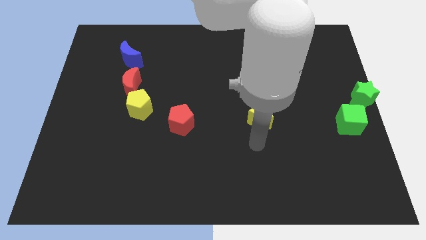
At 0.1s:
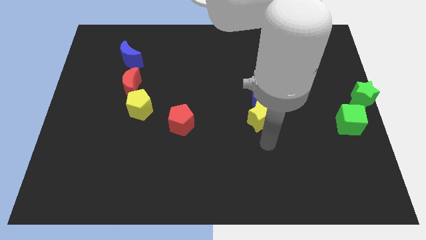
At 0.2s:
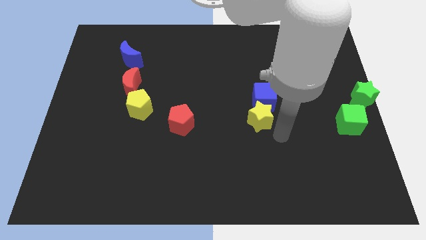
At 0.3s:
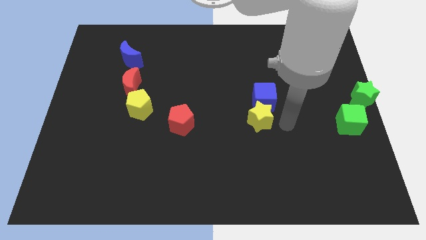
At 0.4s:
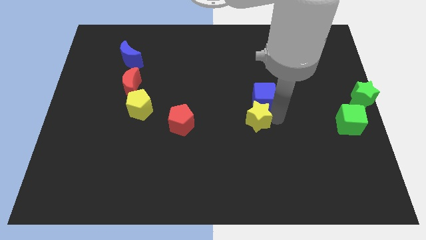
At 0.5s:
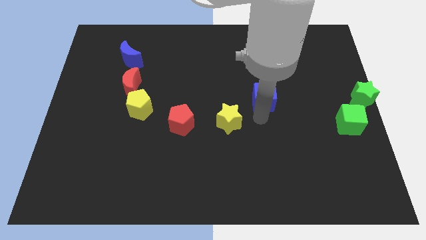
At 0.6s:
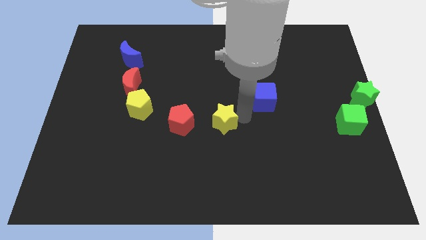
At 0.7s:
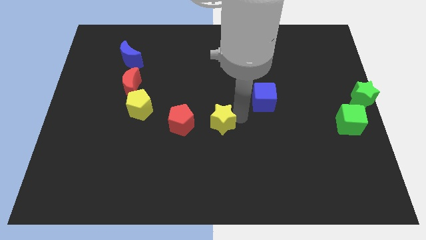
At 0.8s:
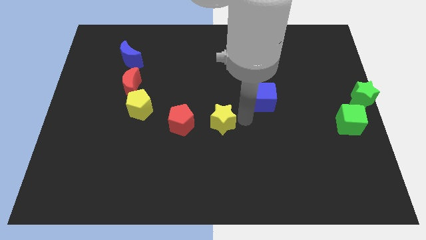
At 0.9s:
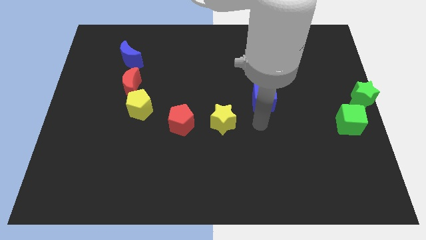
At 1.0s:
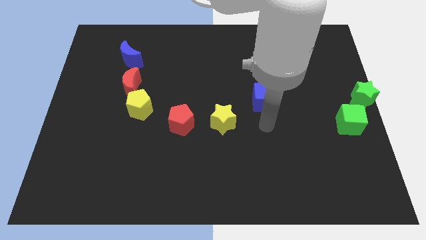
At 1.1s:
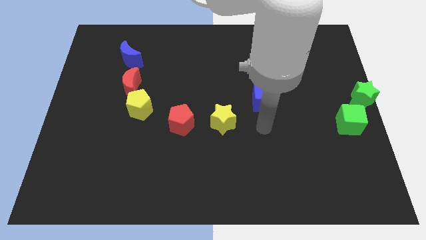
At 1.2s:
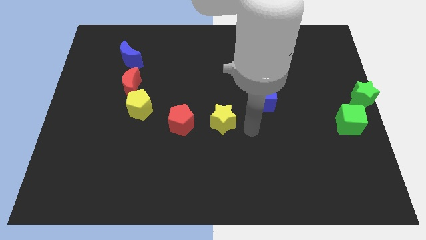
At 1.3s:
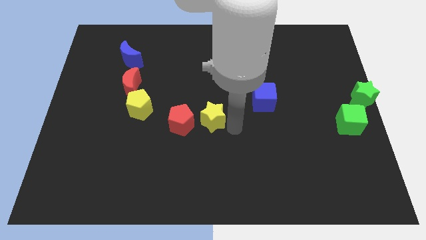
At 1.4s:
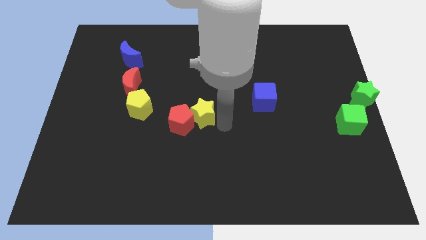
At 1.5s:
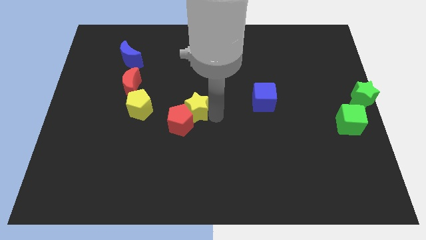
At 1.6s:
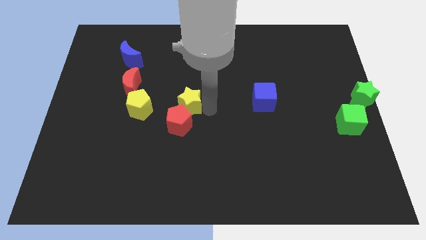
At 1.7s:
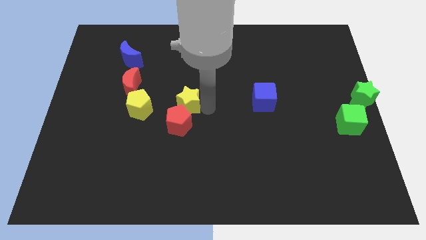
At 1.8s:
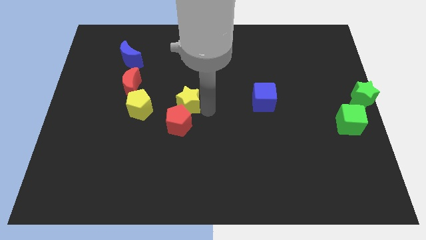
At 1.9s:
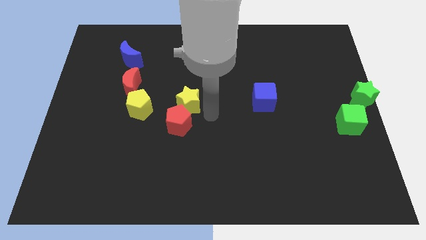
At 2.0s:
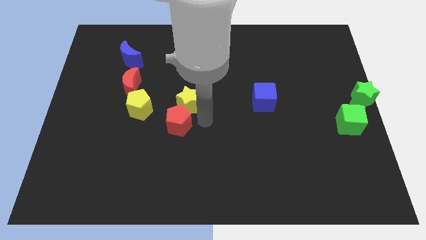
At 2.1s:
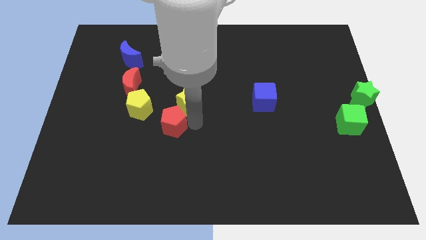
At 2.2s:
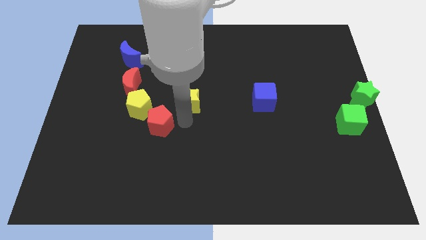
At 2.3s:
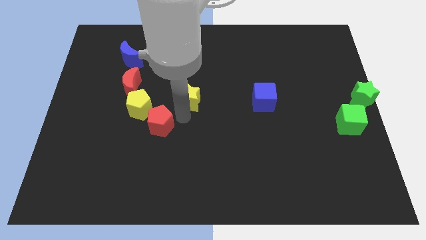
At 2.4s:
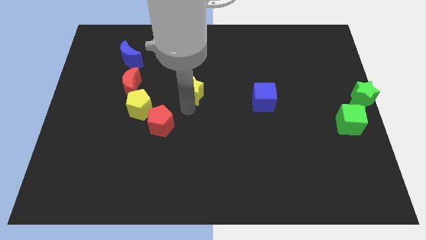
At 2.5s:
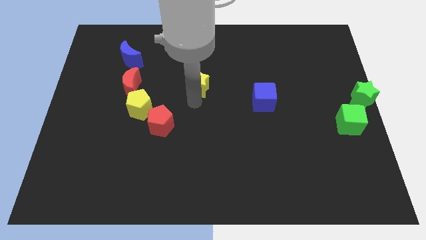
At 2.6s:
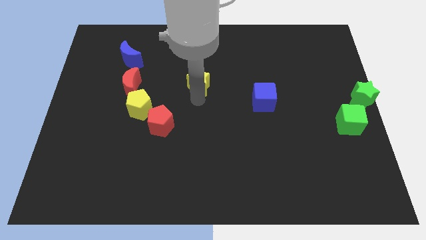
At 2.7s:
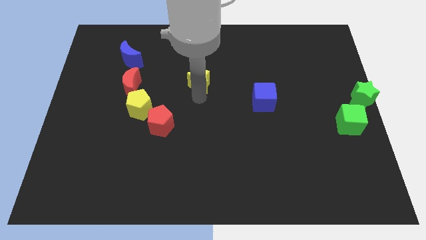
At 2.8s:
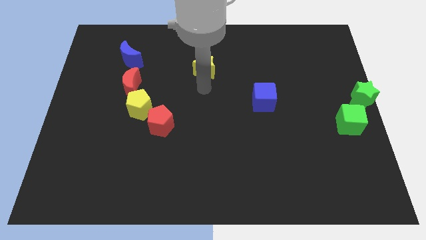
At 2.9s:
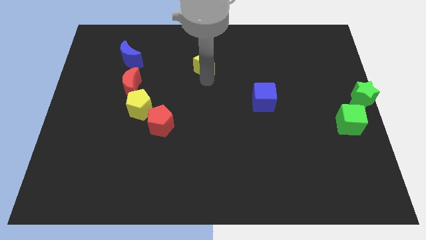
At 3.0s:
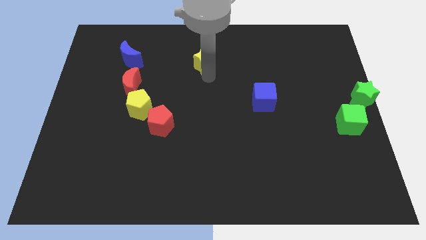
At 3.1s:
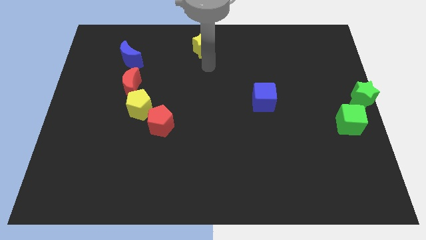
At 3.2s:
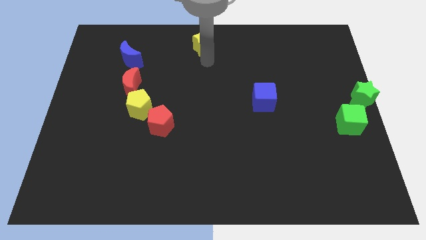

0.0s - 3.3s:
separate yellow star from blue cube

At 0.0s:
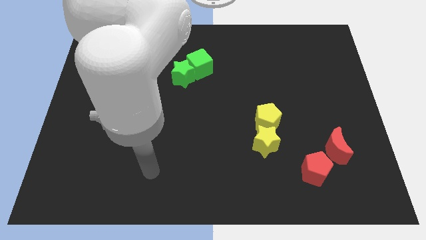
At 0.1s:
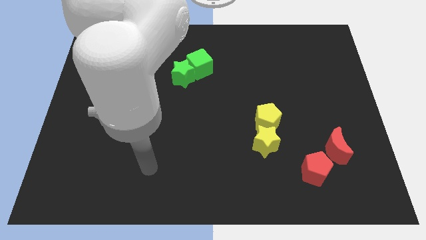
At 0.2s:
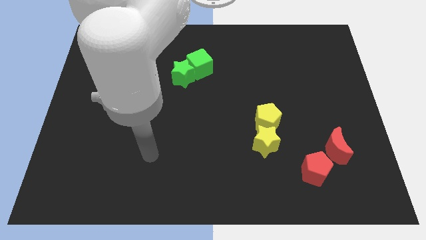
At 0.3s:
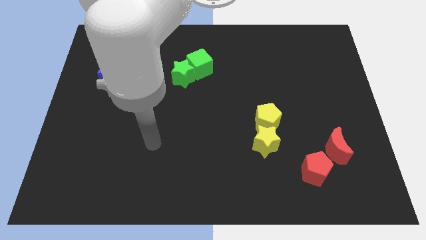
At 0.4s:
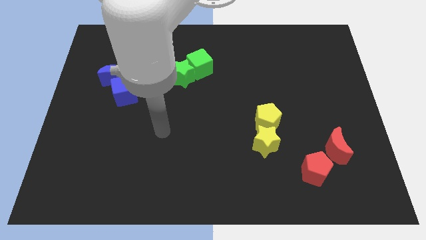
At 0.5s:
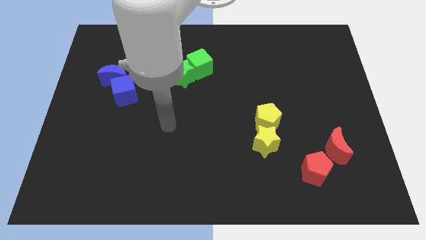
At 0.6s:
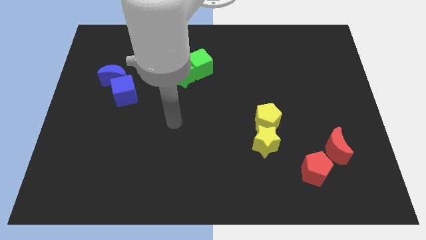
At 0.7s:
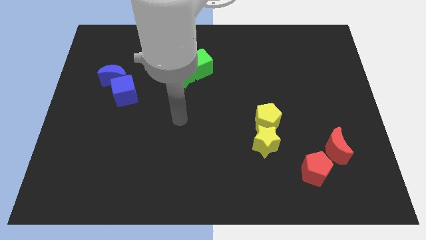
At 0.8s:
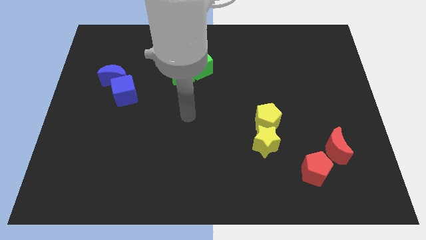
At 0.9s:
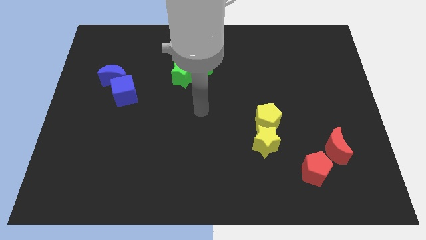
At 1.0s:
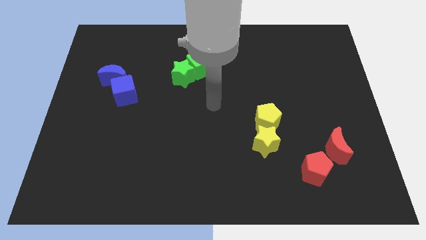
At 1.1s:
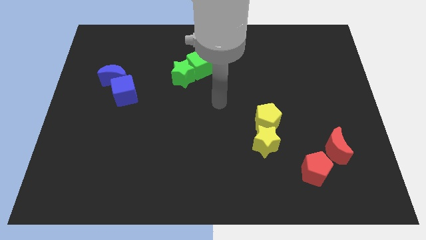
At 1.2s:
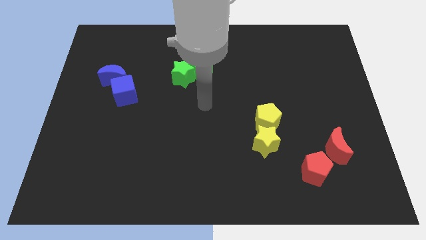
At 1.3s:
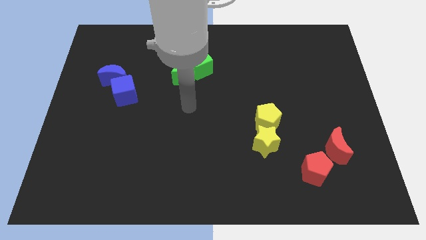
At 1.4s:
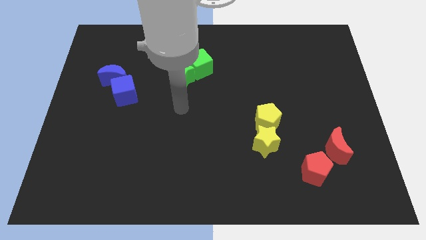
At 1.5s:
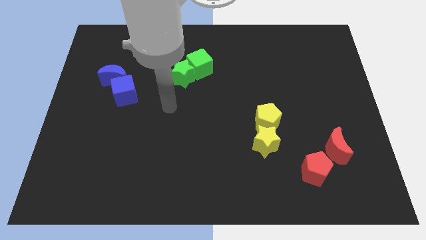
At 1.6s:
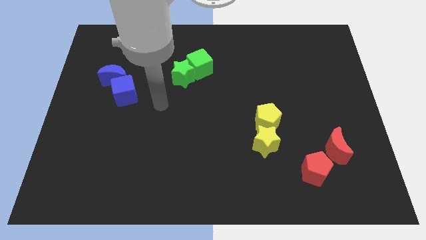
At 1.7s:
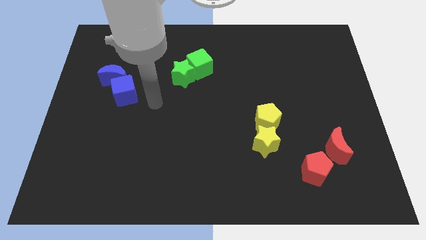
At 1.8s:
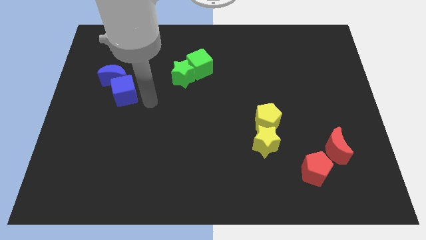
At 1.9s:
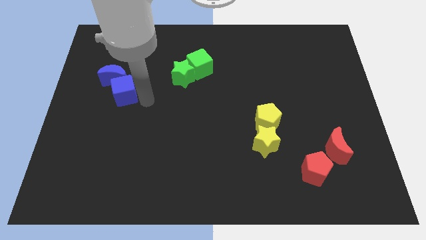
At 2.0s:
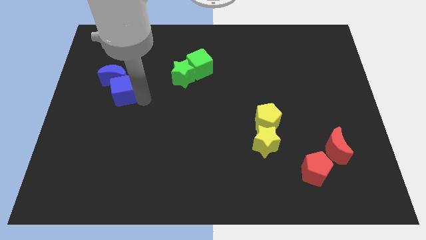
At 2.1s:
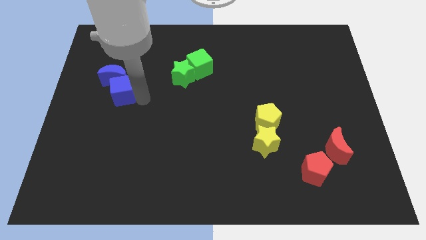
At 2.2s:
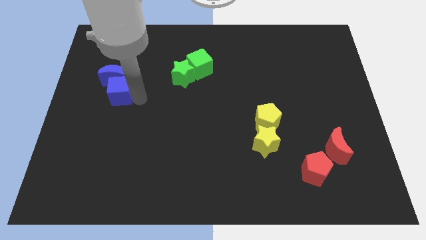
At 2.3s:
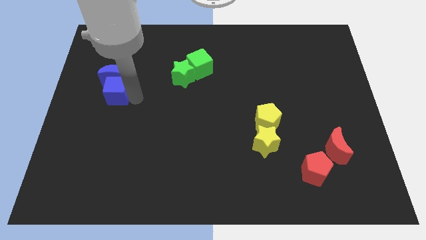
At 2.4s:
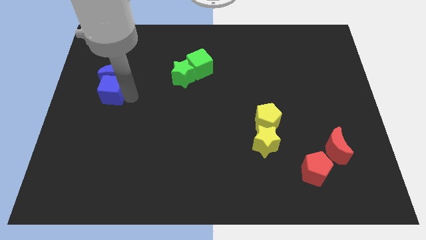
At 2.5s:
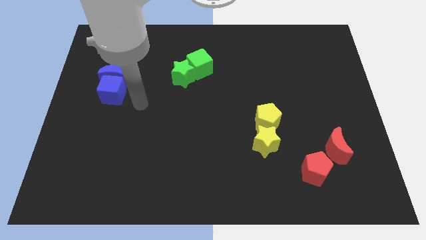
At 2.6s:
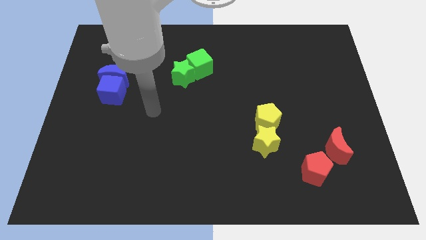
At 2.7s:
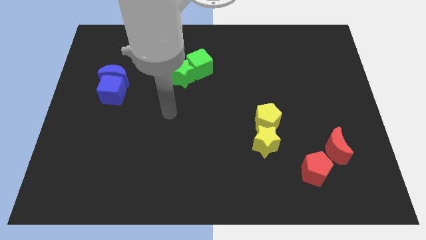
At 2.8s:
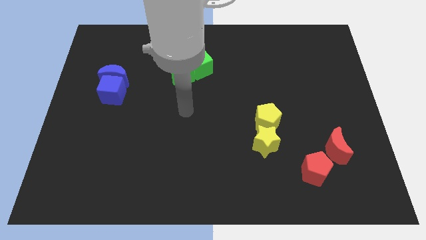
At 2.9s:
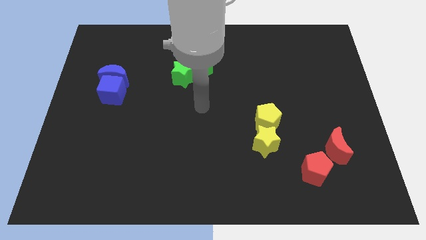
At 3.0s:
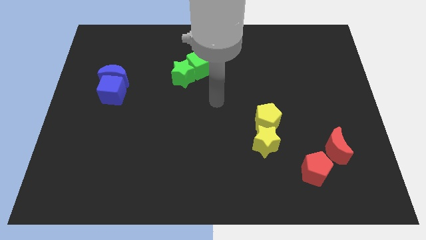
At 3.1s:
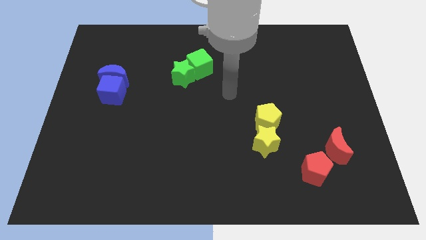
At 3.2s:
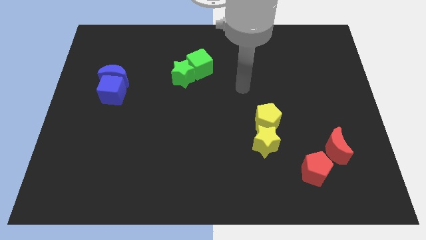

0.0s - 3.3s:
move the blue cube to the bottom side of the blue crescent

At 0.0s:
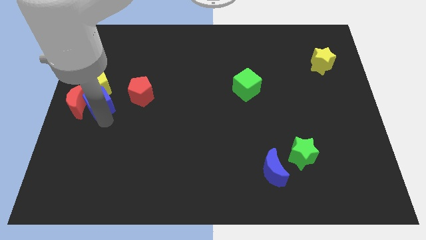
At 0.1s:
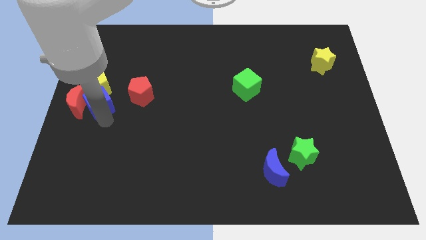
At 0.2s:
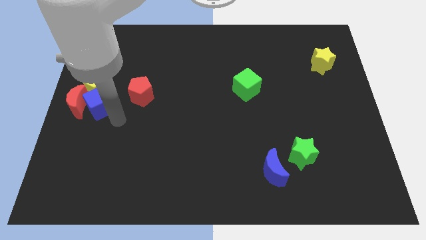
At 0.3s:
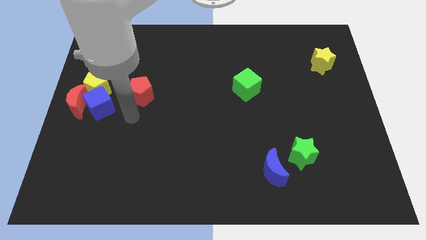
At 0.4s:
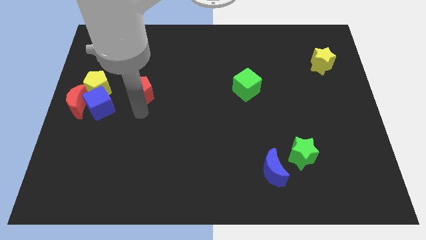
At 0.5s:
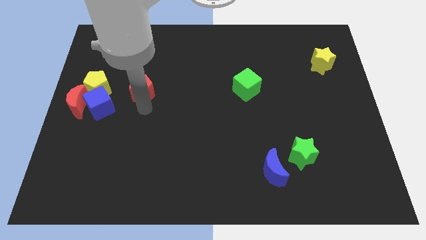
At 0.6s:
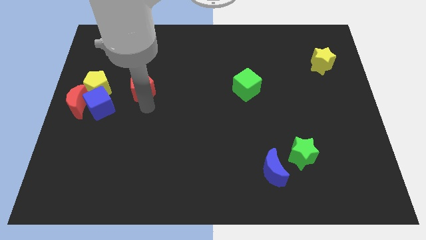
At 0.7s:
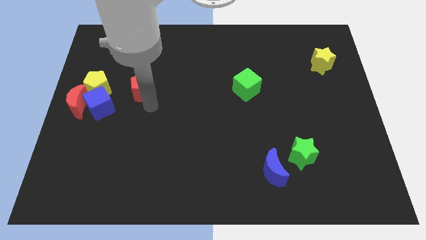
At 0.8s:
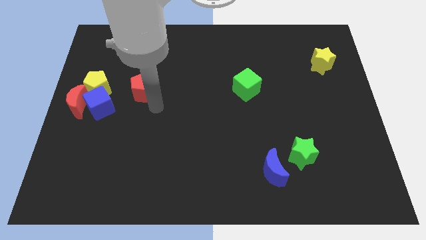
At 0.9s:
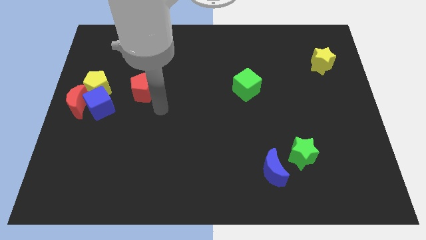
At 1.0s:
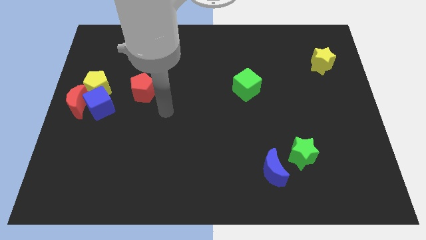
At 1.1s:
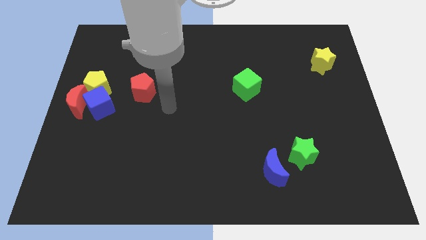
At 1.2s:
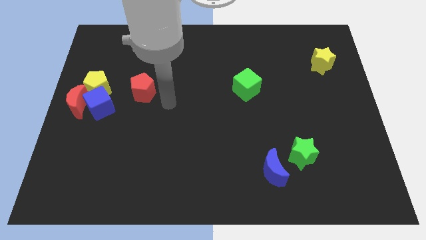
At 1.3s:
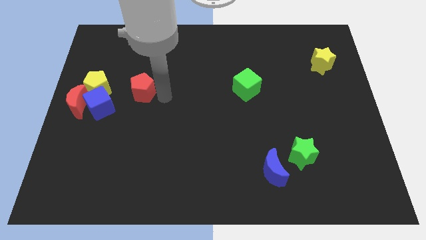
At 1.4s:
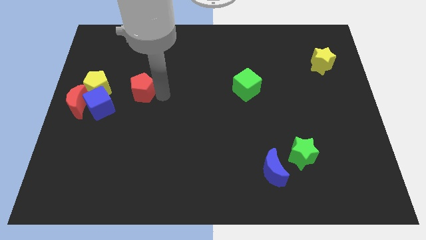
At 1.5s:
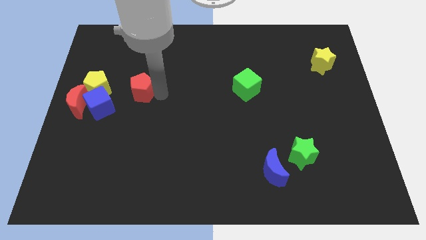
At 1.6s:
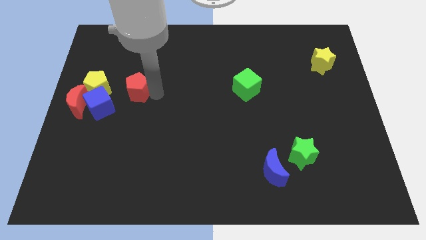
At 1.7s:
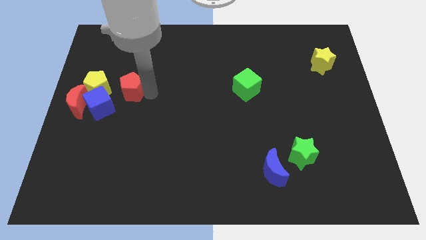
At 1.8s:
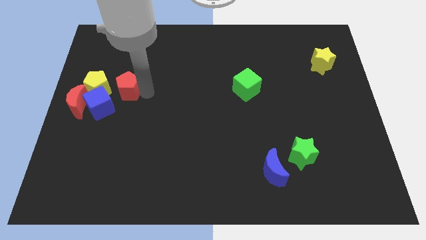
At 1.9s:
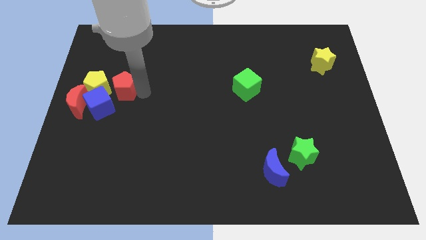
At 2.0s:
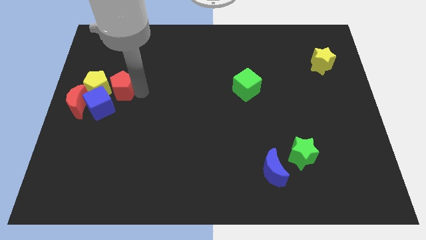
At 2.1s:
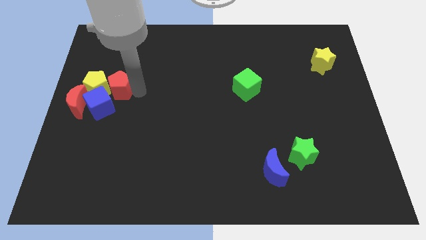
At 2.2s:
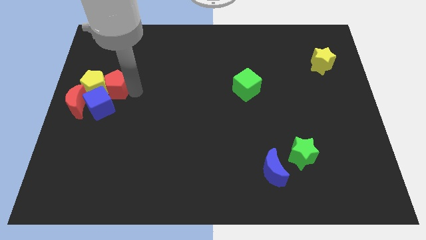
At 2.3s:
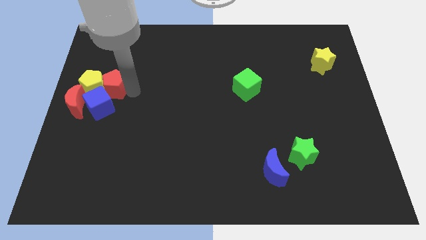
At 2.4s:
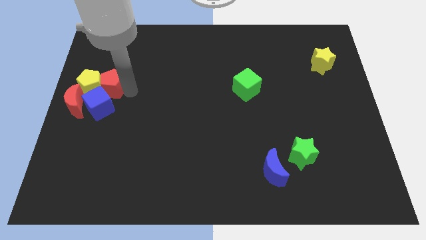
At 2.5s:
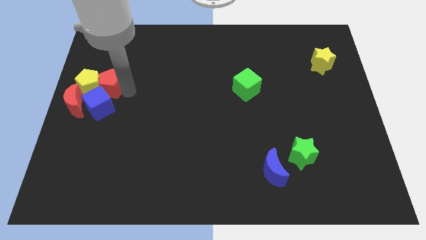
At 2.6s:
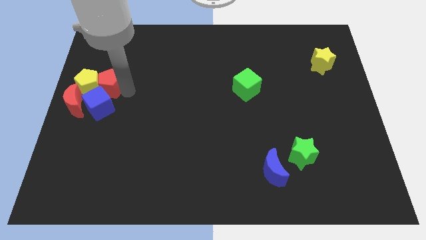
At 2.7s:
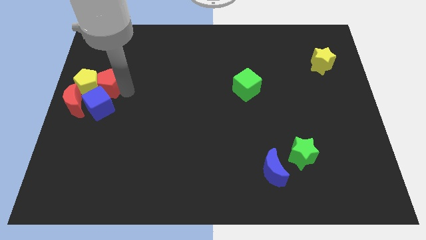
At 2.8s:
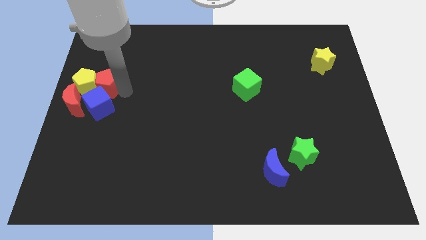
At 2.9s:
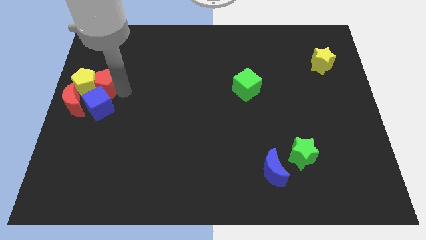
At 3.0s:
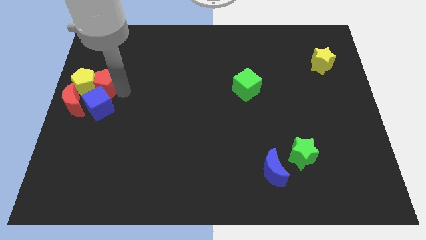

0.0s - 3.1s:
push the red blocks and yellow pentagon towards the left side of the board
